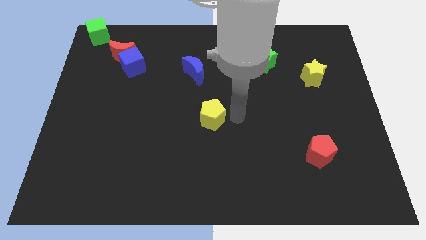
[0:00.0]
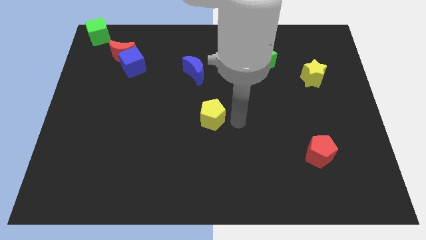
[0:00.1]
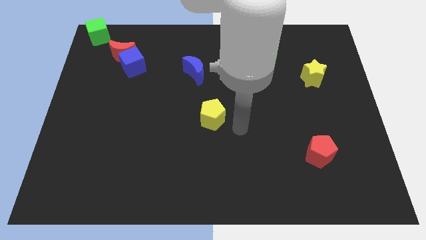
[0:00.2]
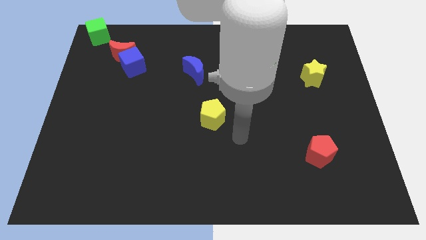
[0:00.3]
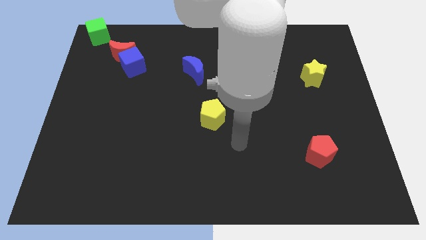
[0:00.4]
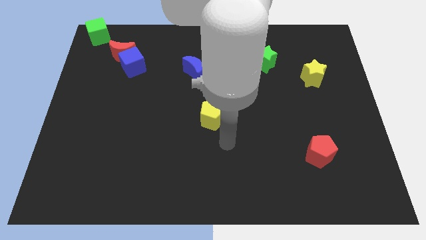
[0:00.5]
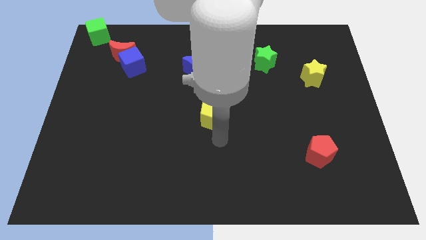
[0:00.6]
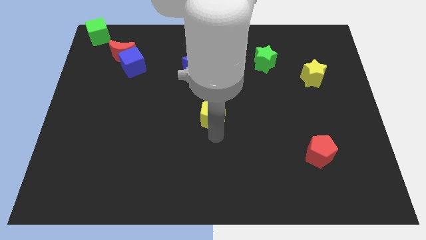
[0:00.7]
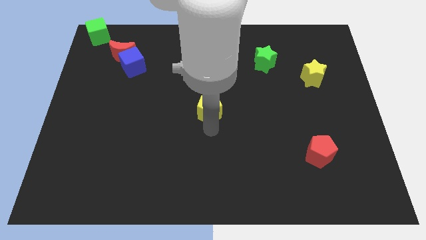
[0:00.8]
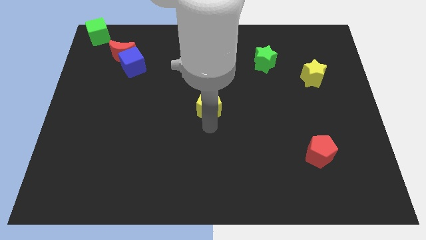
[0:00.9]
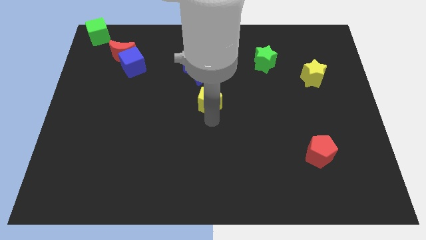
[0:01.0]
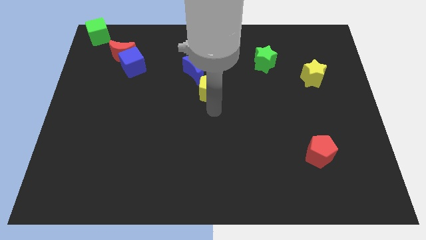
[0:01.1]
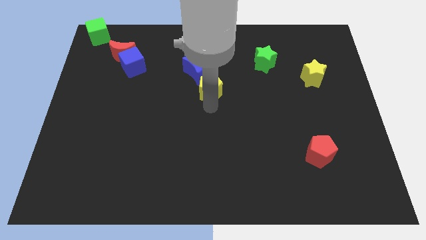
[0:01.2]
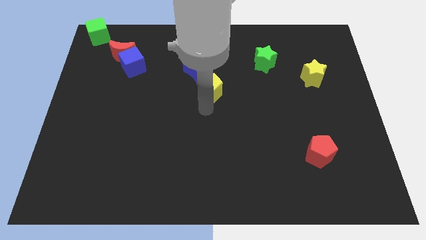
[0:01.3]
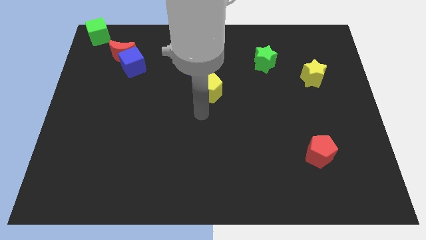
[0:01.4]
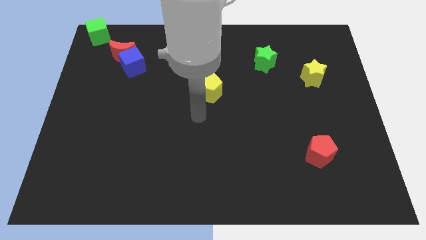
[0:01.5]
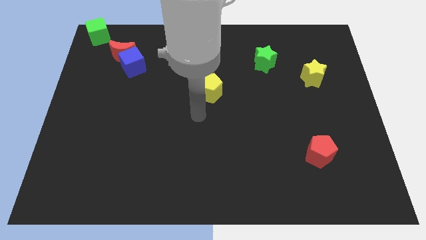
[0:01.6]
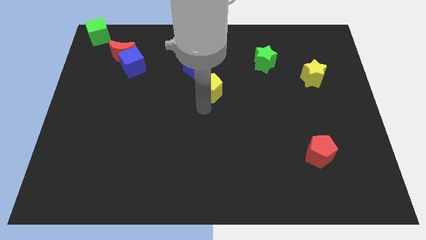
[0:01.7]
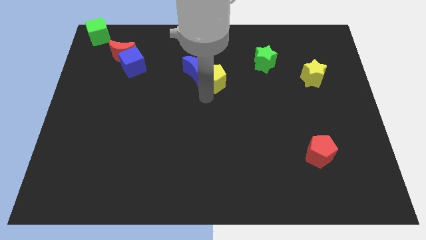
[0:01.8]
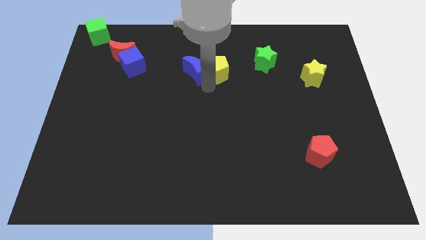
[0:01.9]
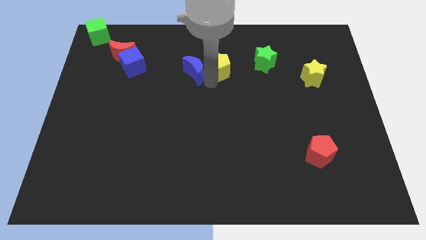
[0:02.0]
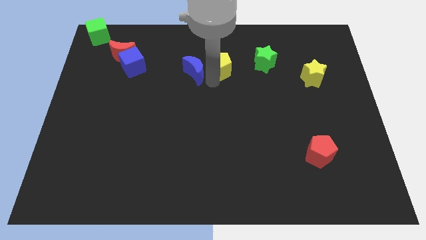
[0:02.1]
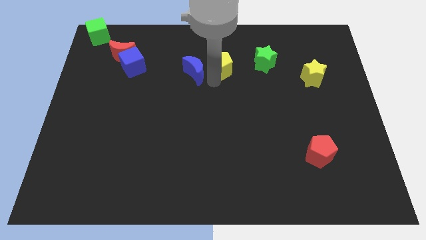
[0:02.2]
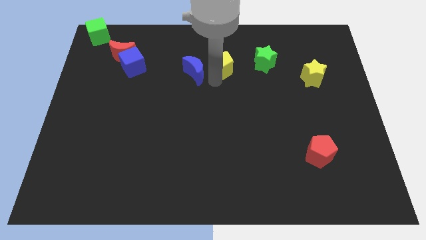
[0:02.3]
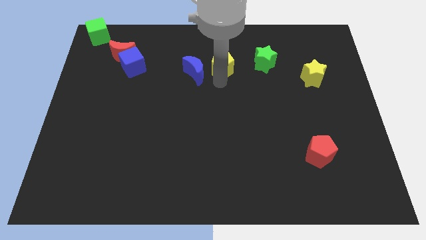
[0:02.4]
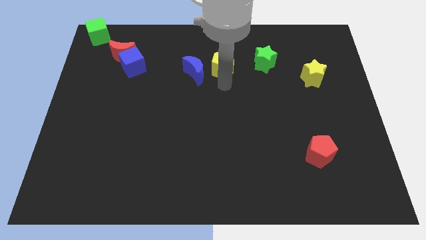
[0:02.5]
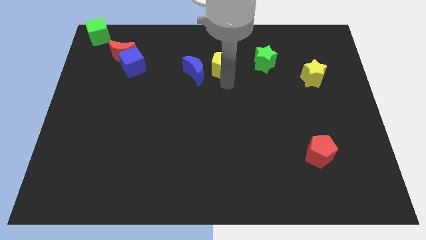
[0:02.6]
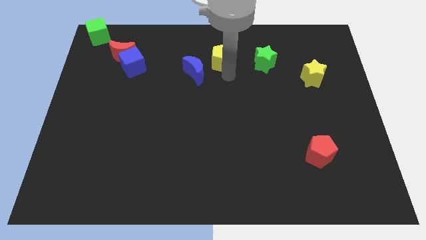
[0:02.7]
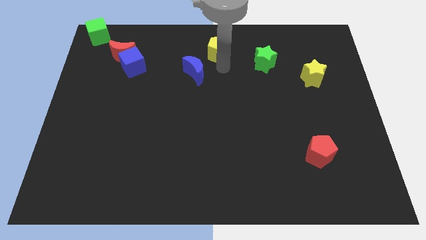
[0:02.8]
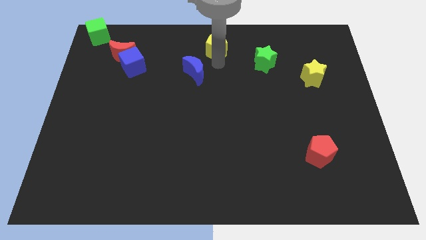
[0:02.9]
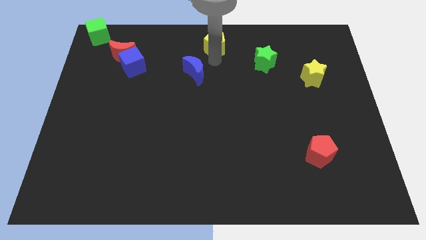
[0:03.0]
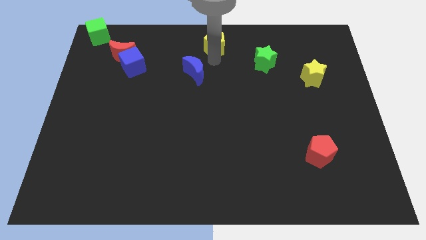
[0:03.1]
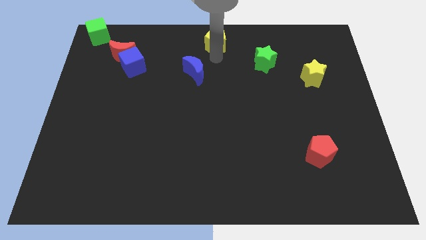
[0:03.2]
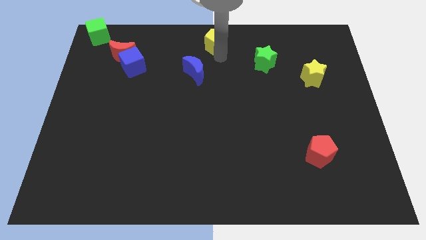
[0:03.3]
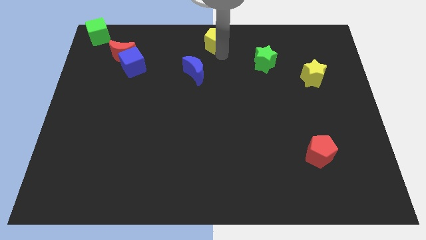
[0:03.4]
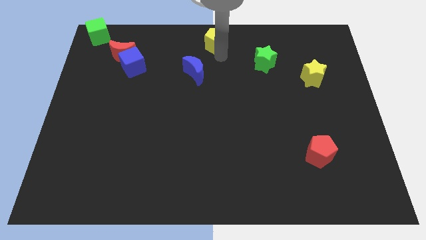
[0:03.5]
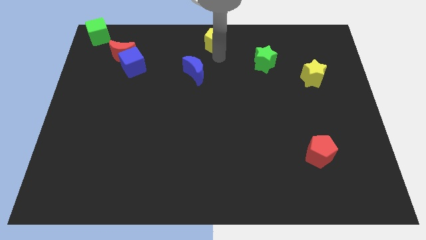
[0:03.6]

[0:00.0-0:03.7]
place the yellow pentagon to the top center of the board

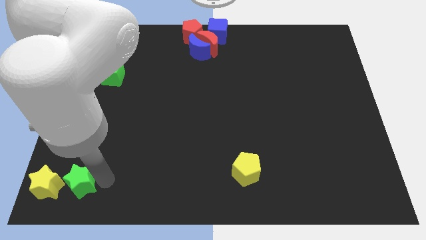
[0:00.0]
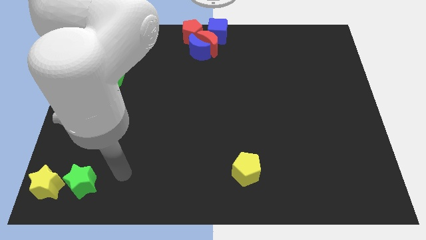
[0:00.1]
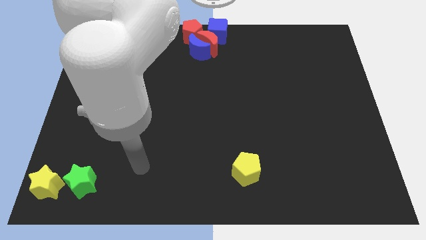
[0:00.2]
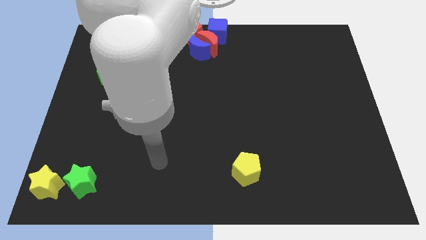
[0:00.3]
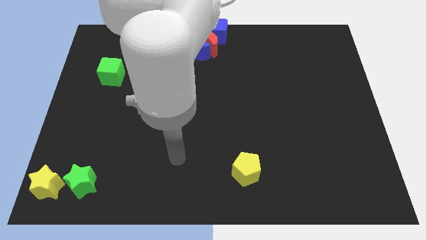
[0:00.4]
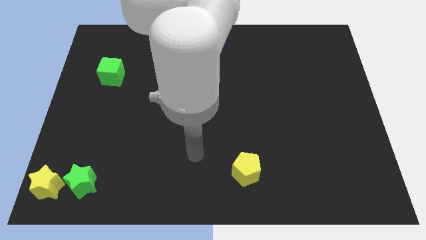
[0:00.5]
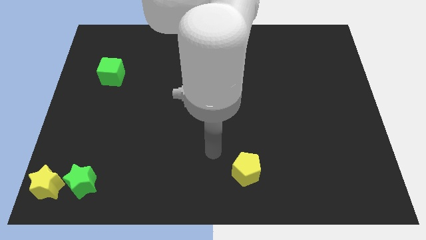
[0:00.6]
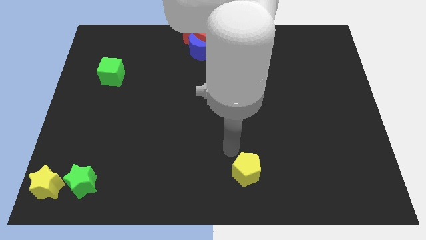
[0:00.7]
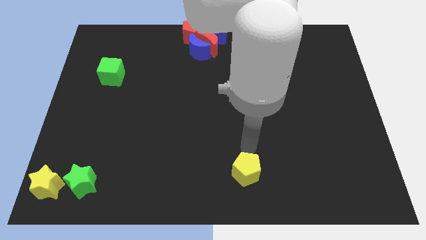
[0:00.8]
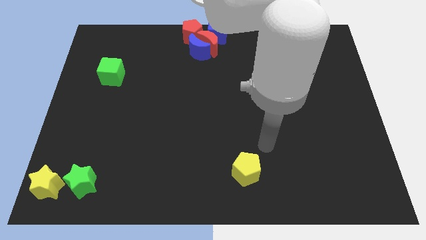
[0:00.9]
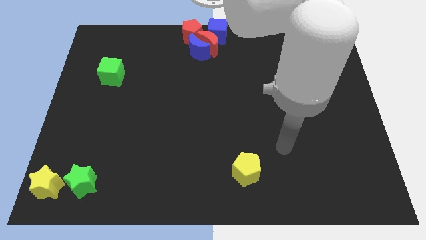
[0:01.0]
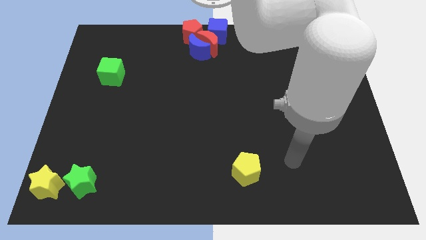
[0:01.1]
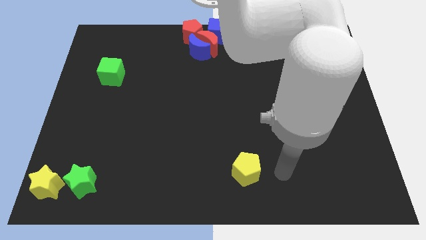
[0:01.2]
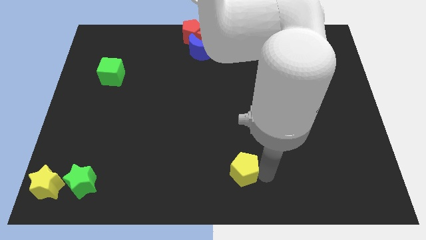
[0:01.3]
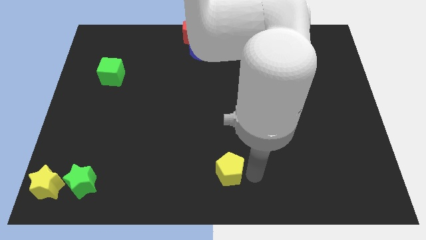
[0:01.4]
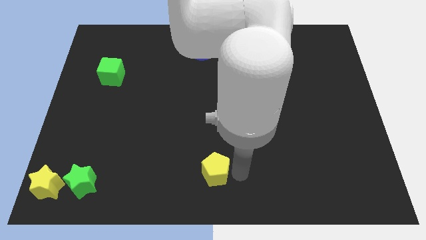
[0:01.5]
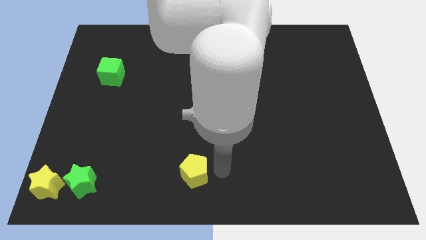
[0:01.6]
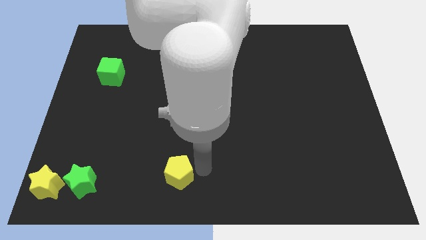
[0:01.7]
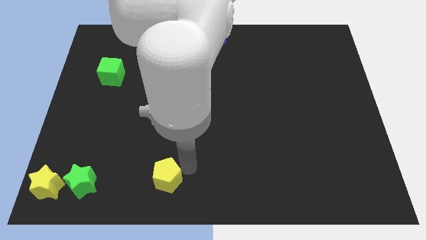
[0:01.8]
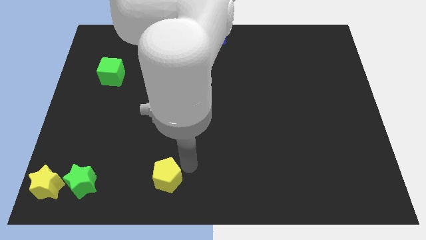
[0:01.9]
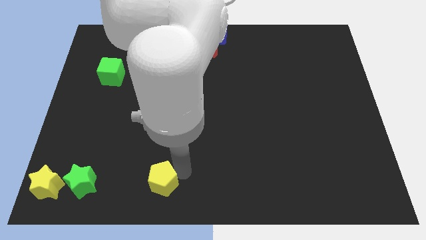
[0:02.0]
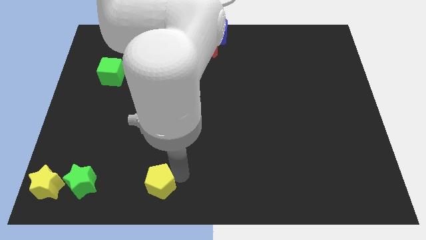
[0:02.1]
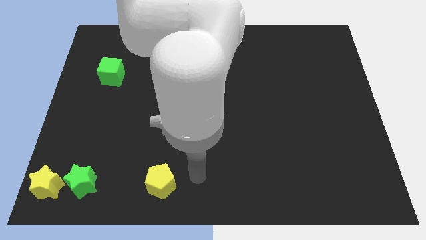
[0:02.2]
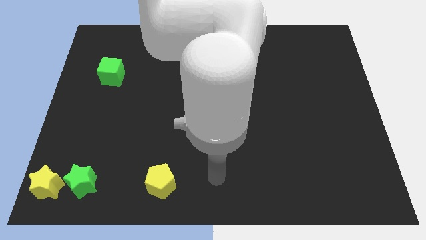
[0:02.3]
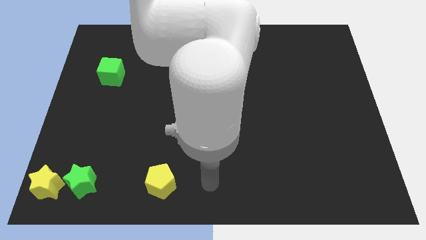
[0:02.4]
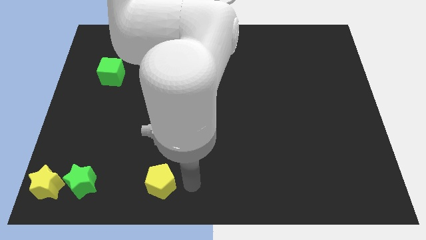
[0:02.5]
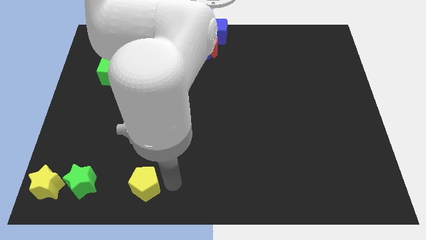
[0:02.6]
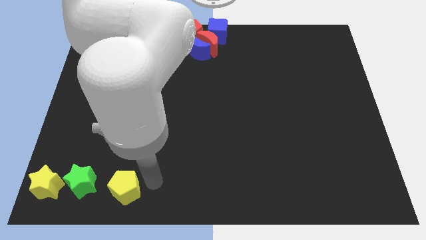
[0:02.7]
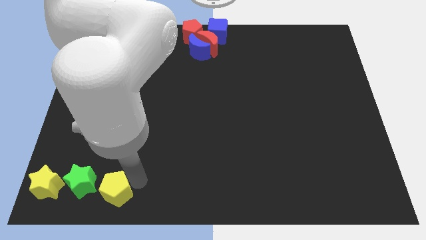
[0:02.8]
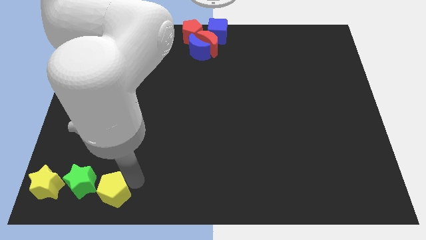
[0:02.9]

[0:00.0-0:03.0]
place the yellow pentagon to the right side of green star

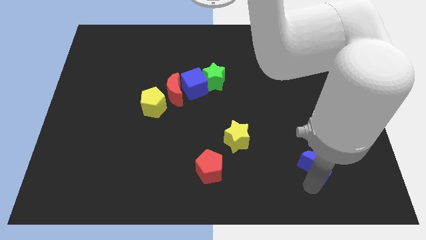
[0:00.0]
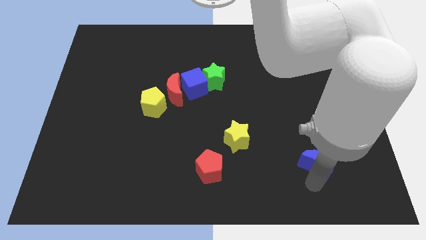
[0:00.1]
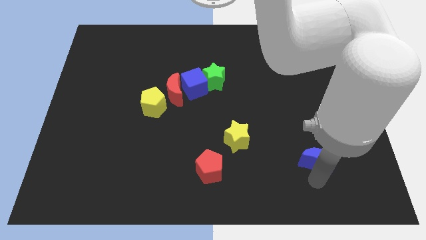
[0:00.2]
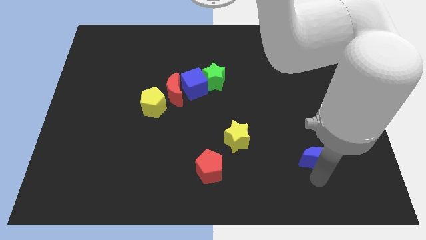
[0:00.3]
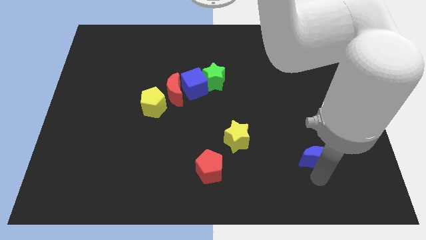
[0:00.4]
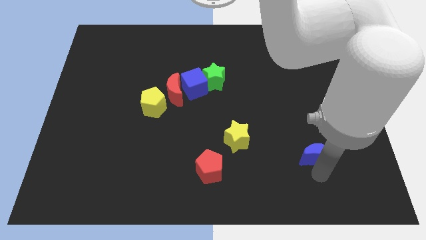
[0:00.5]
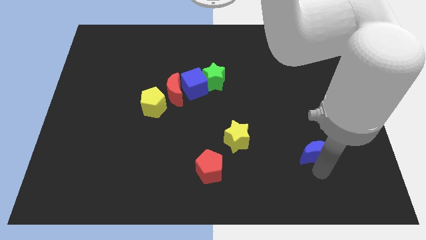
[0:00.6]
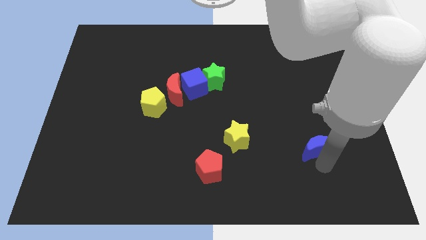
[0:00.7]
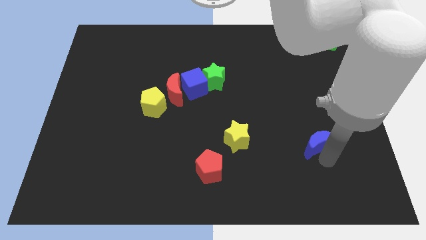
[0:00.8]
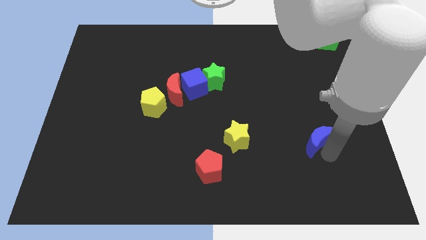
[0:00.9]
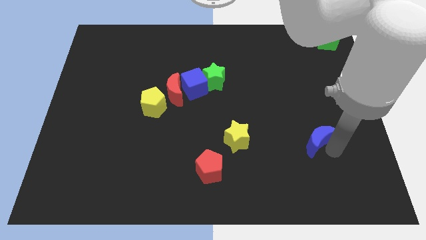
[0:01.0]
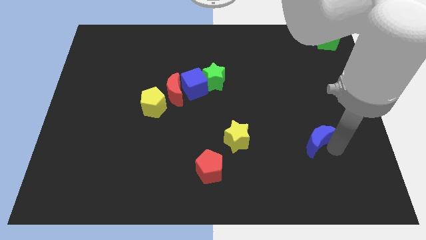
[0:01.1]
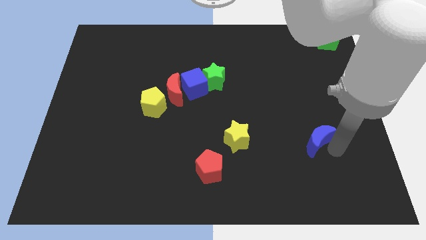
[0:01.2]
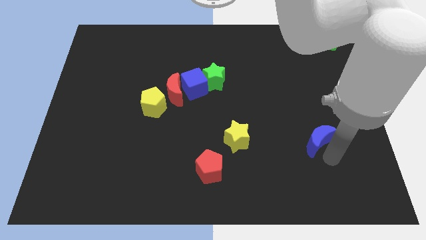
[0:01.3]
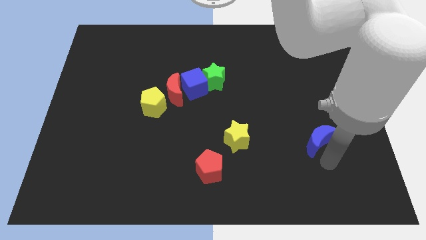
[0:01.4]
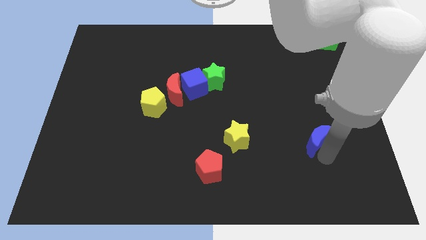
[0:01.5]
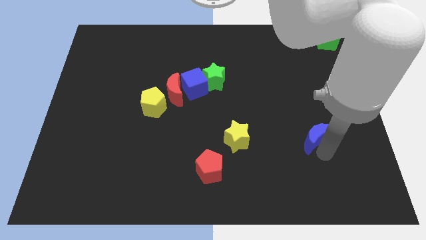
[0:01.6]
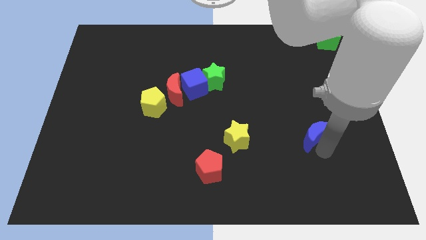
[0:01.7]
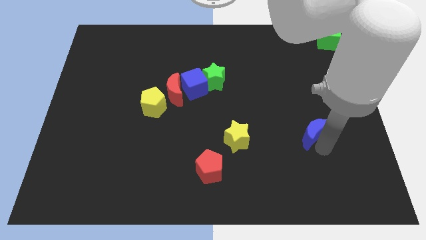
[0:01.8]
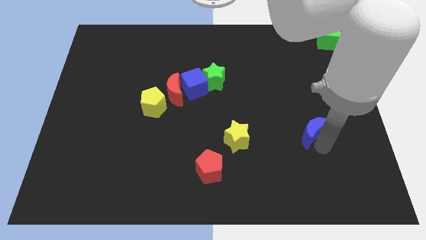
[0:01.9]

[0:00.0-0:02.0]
place the blue moon to the right of the yellow star

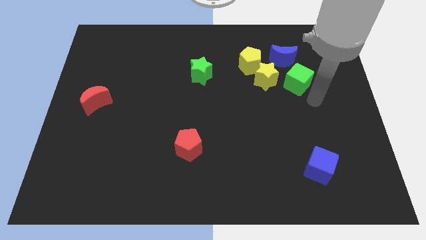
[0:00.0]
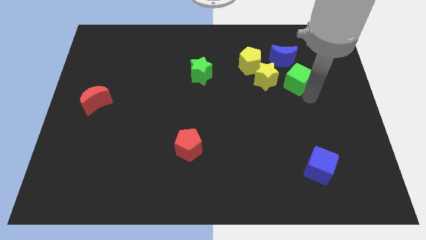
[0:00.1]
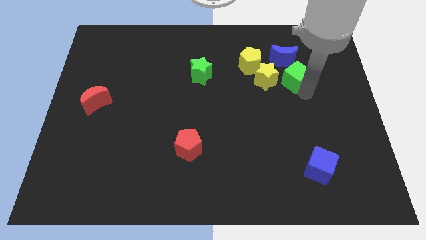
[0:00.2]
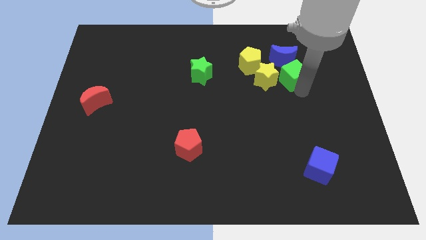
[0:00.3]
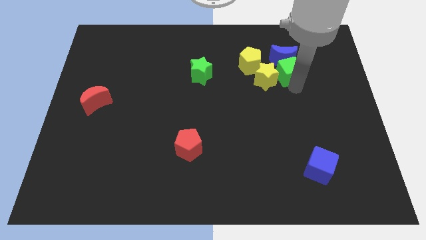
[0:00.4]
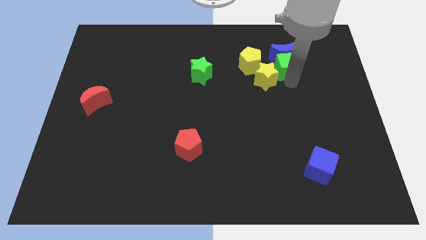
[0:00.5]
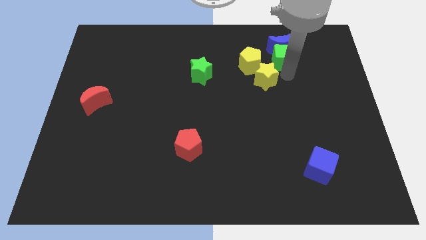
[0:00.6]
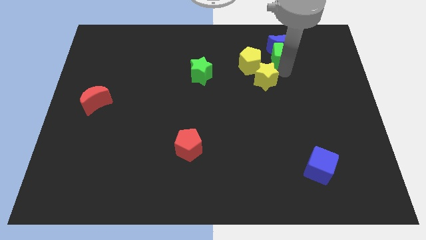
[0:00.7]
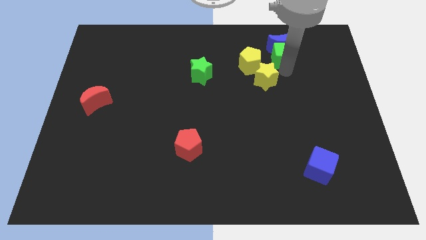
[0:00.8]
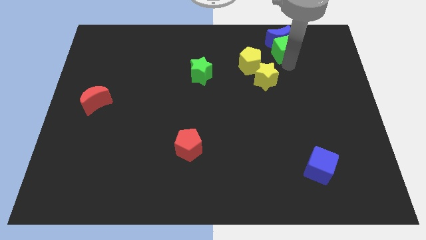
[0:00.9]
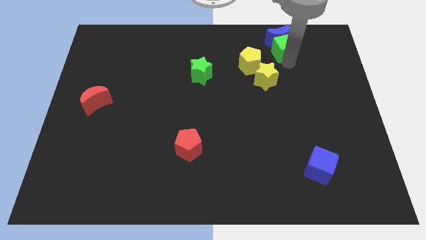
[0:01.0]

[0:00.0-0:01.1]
push the green cube in to blue crescent
